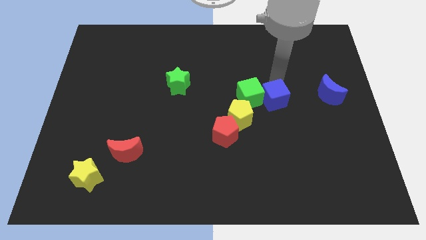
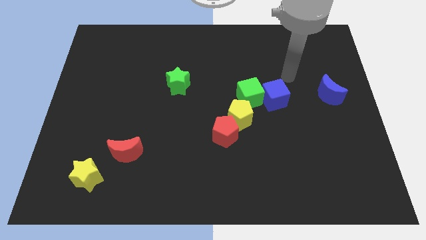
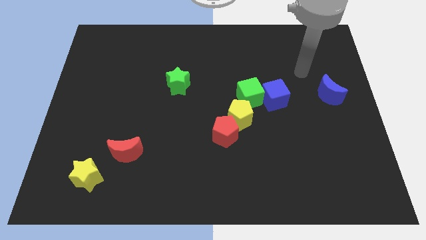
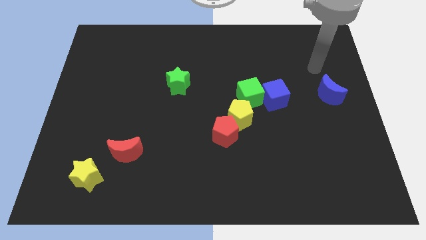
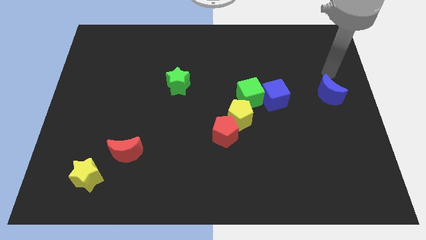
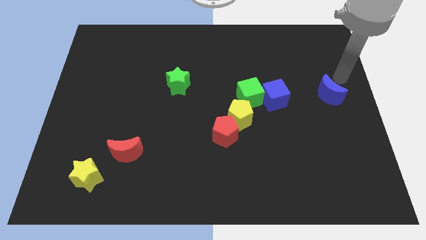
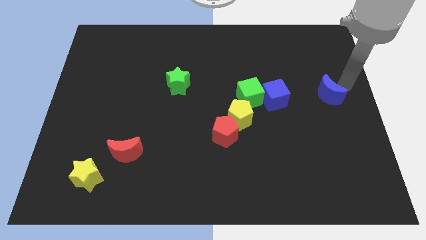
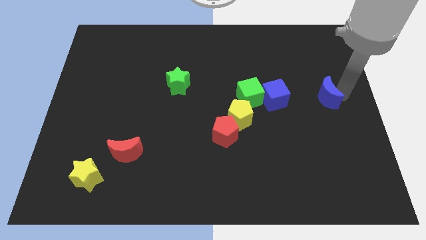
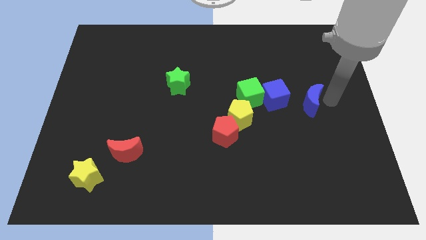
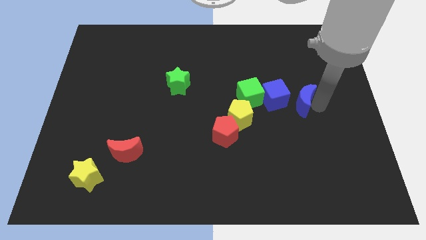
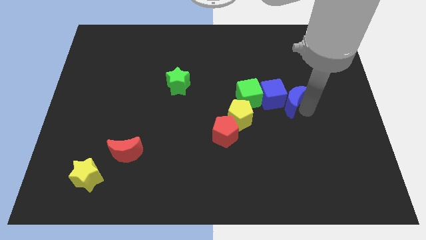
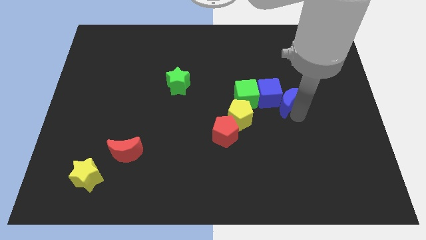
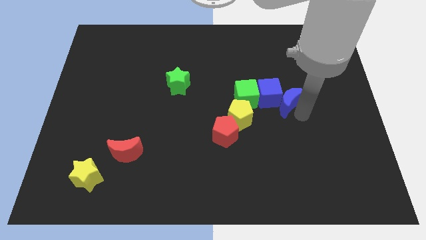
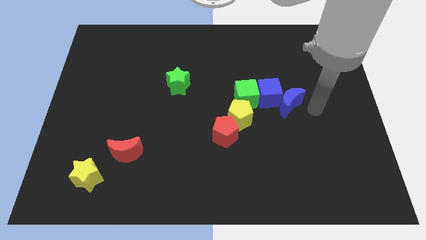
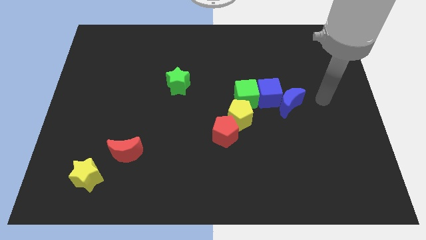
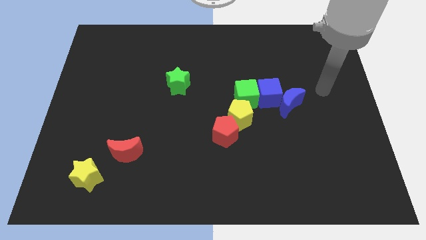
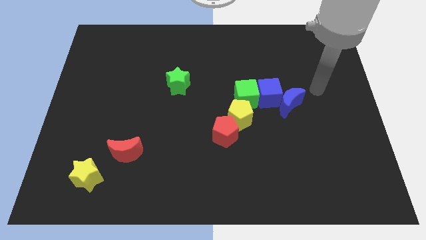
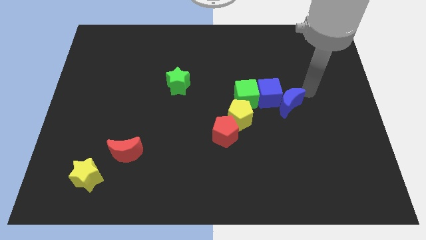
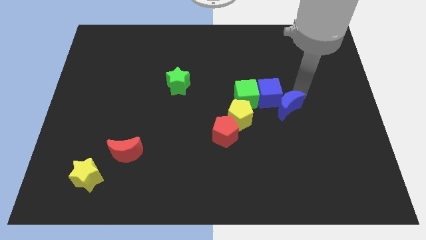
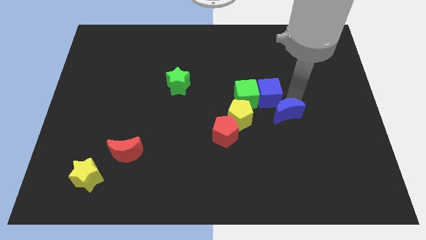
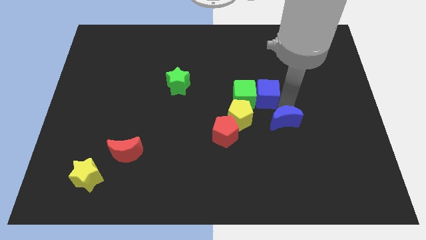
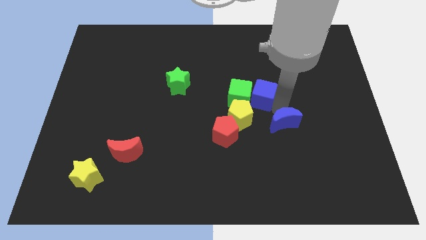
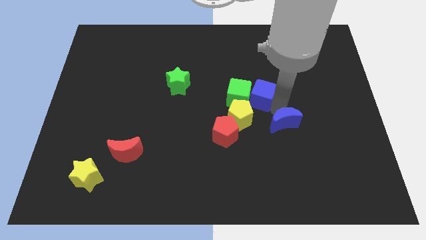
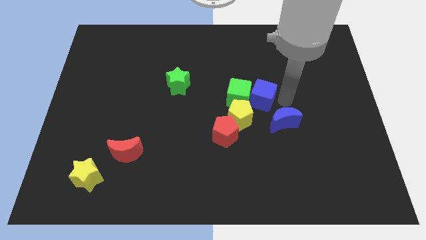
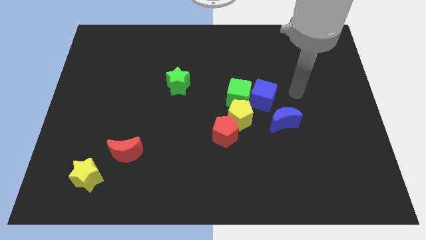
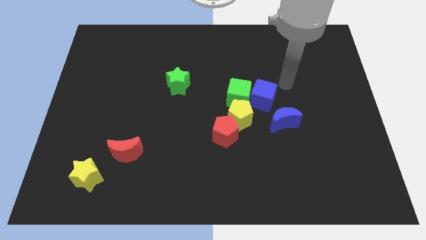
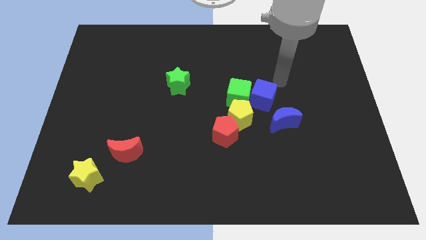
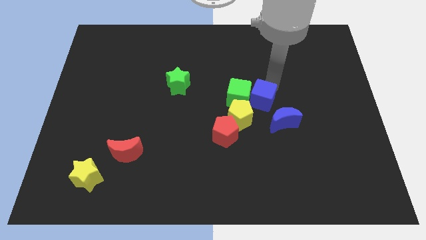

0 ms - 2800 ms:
push the blue moon down to the right of yellow pentagon

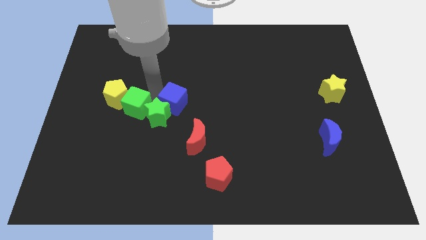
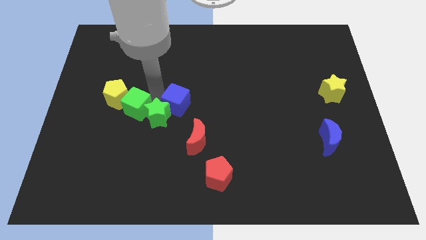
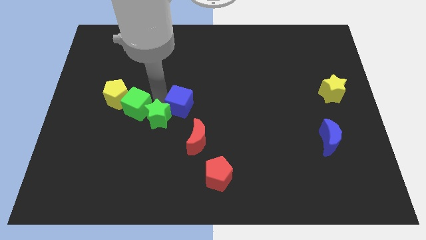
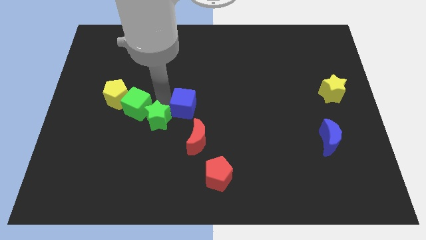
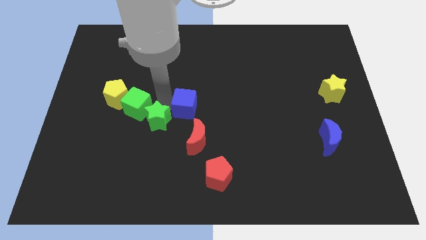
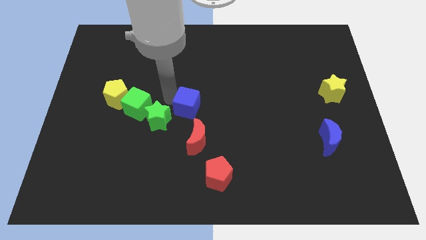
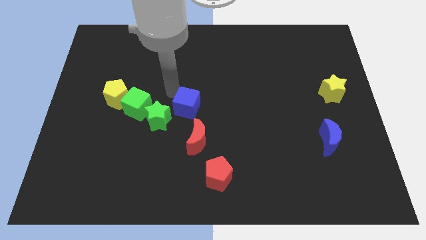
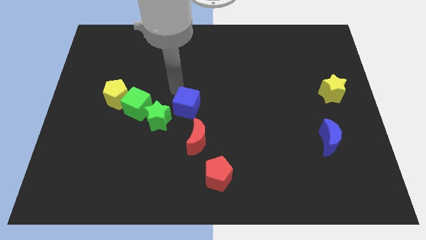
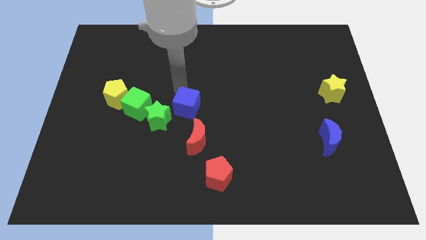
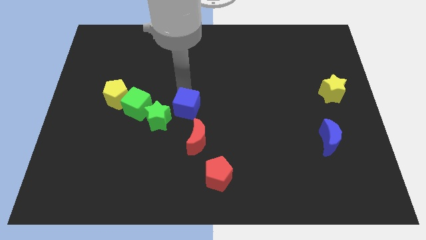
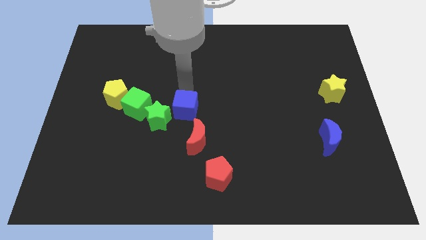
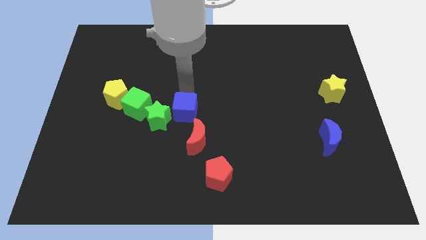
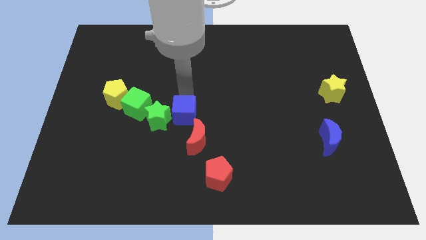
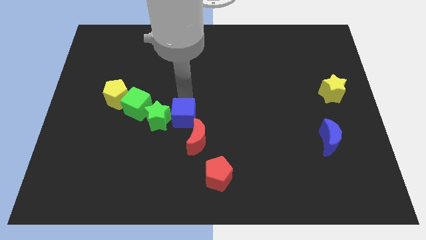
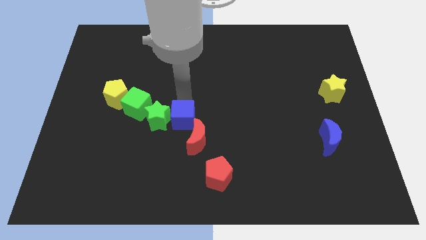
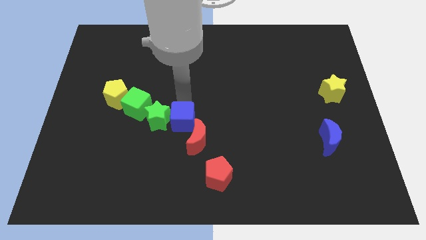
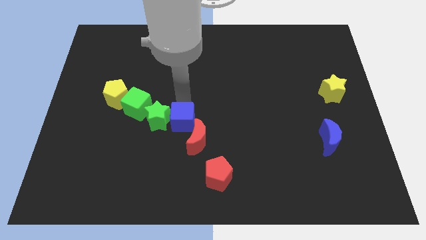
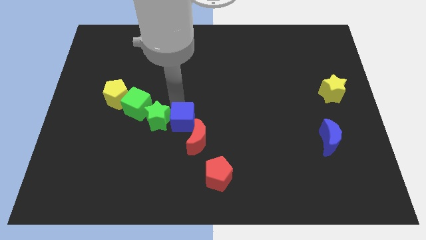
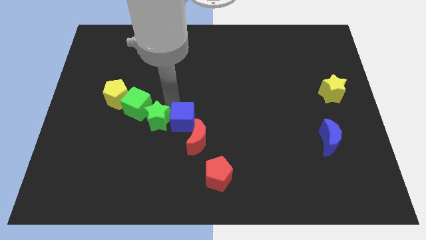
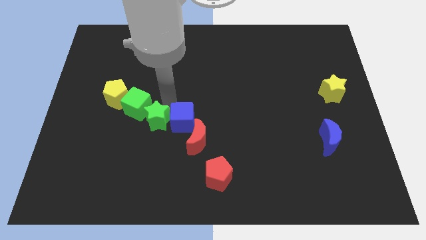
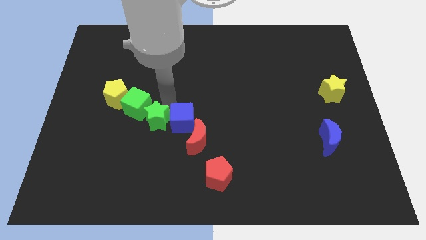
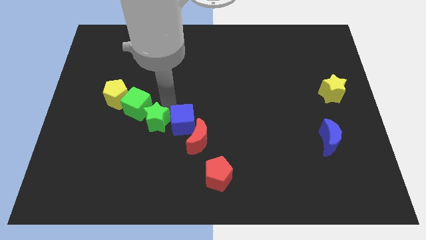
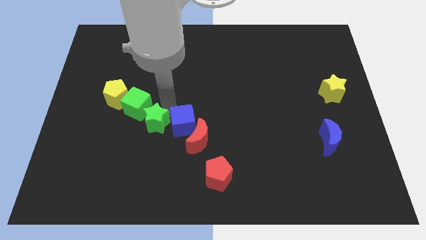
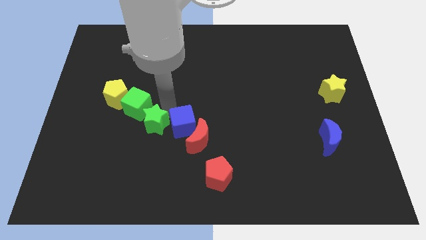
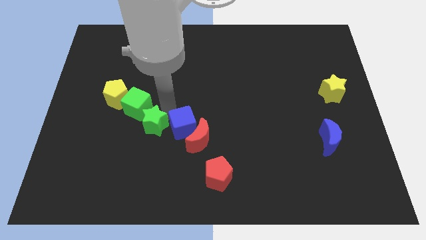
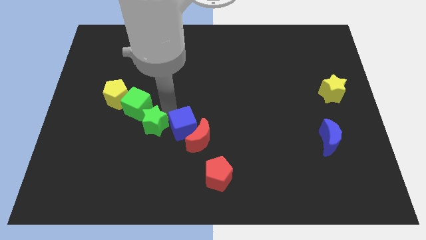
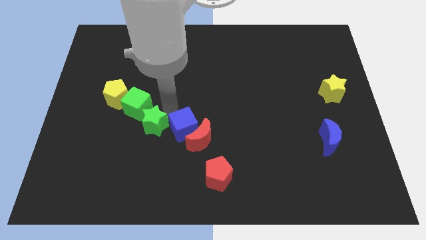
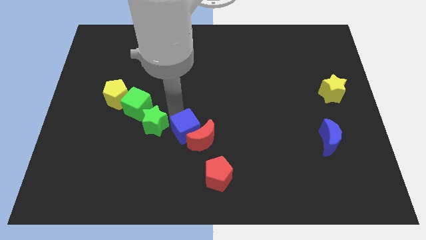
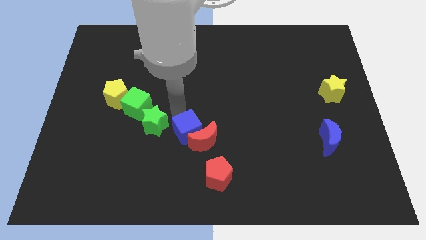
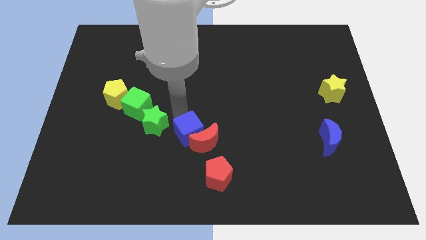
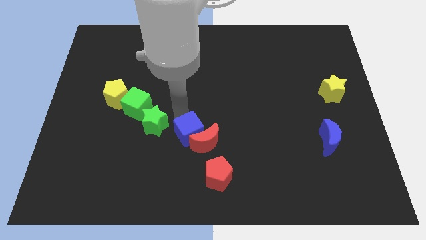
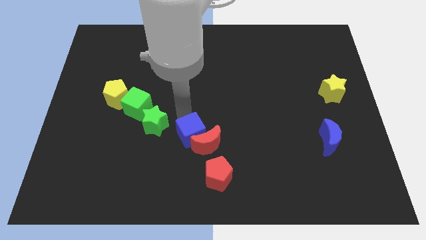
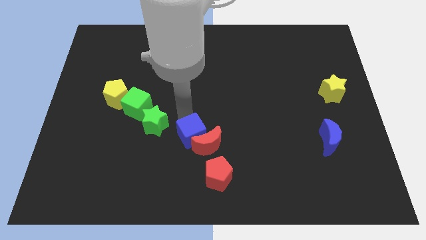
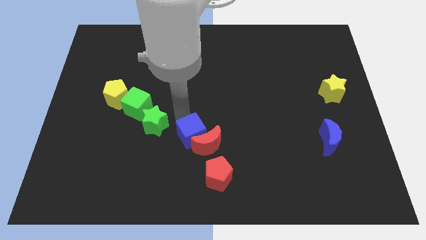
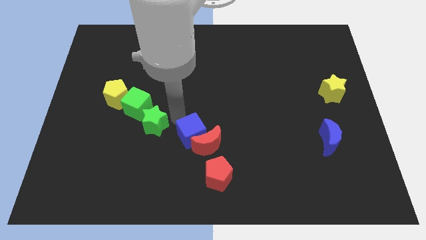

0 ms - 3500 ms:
move blue cube into the red moon

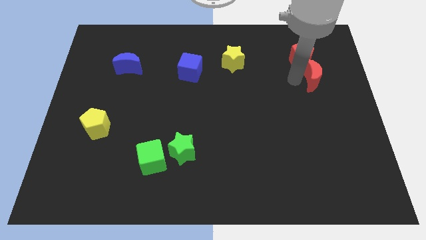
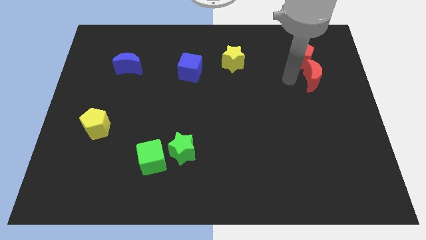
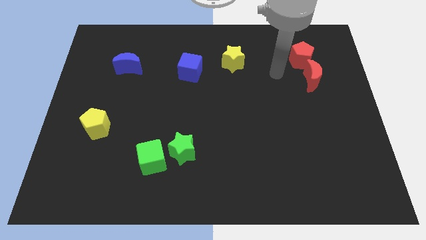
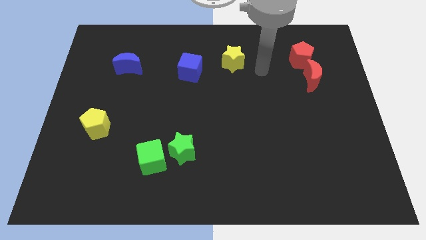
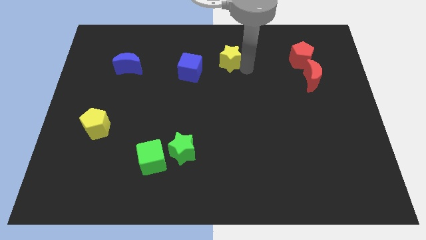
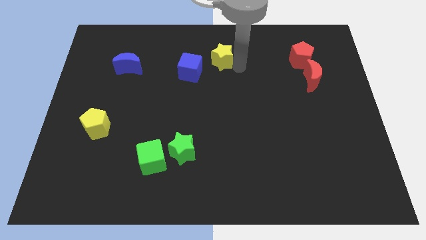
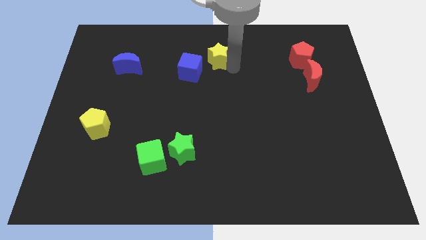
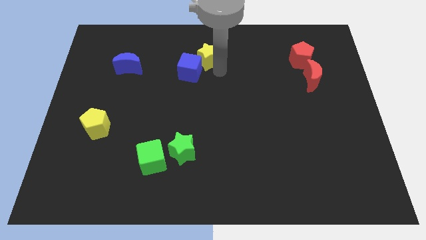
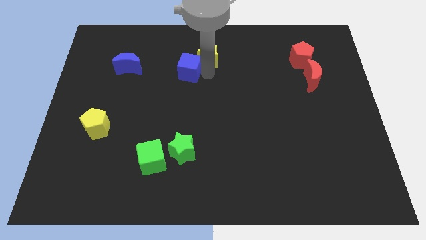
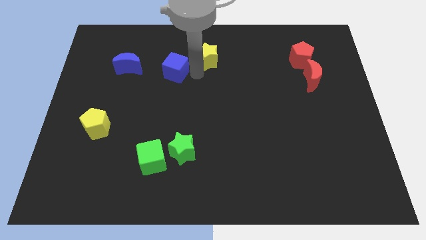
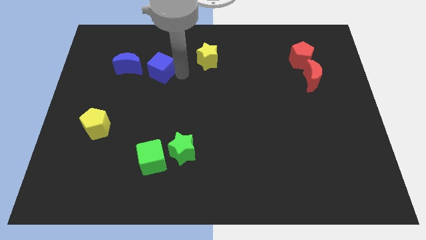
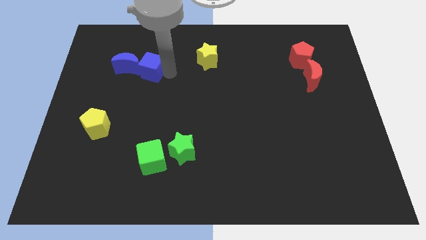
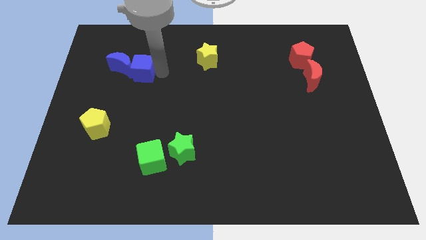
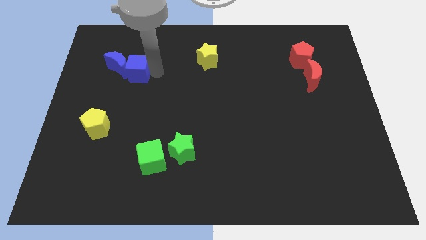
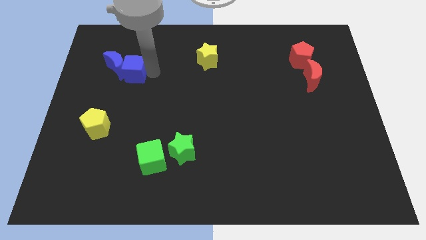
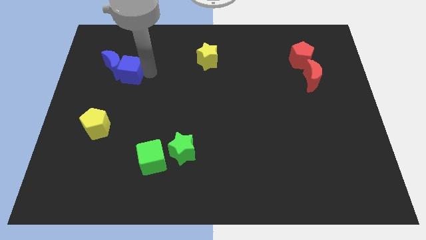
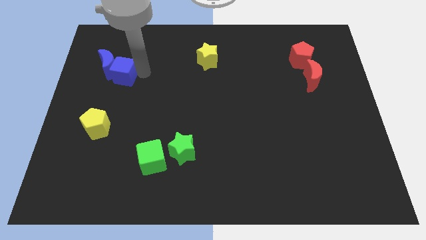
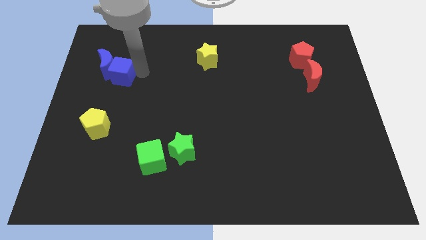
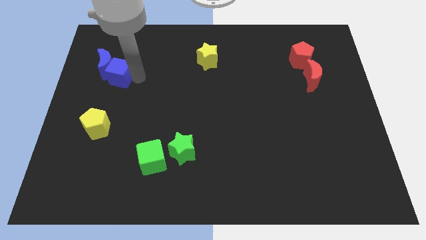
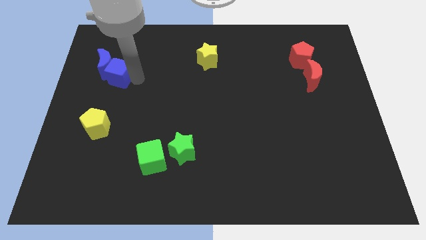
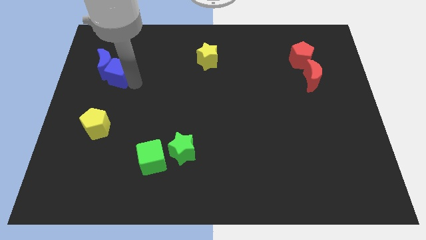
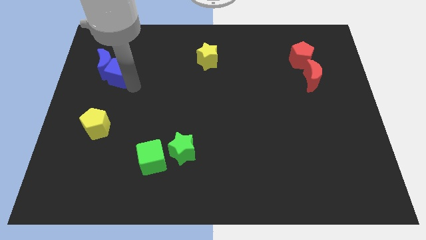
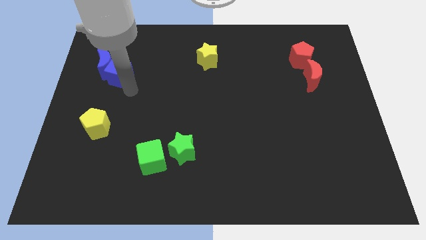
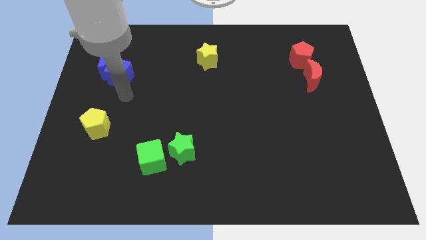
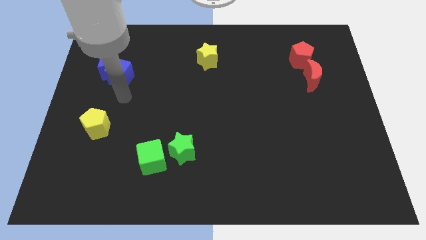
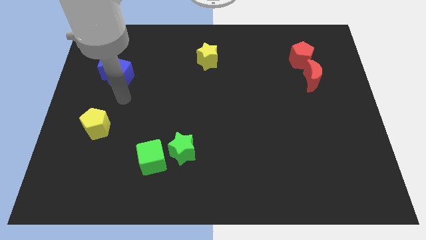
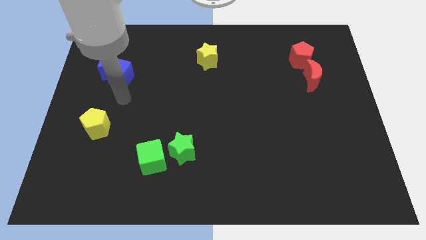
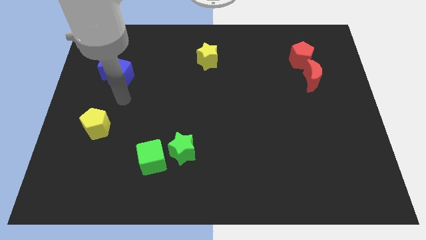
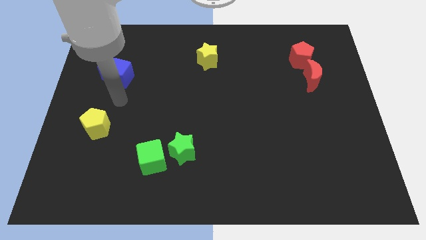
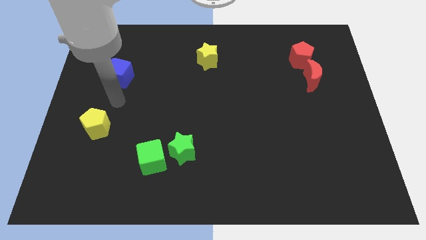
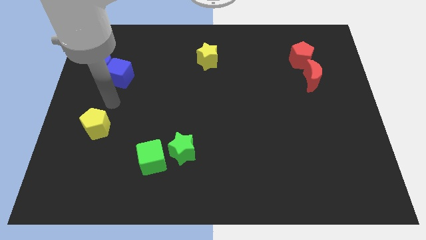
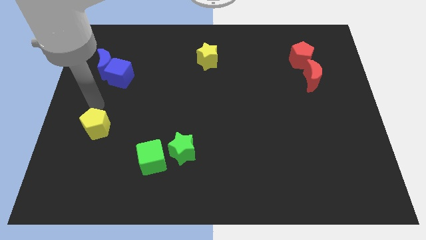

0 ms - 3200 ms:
push the blue cube into the blue moon
